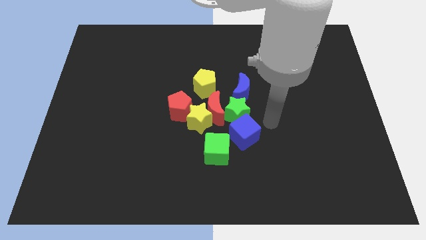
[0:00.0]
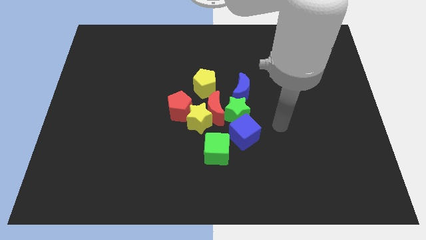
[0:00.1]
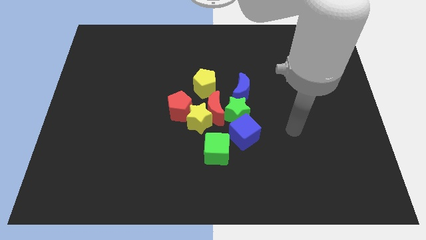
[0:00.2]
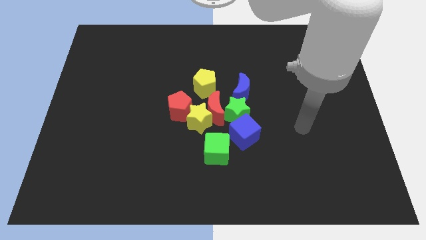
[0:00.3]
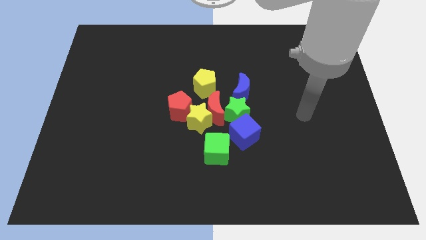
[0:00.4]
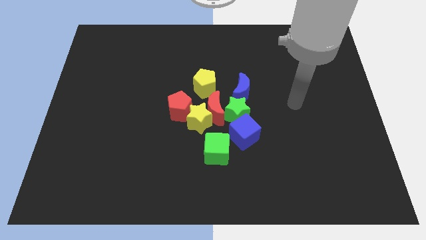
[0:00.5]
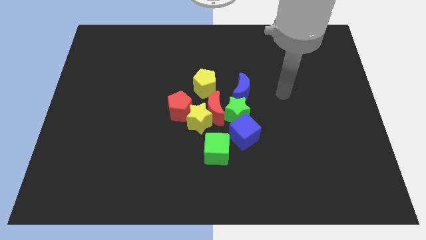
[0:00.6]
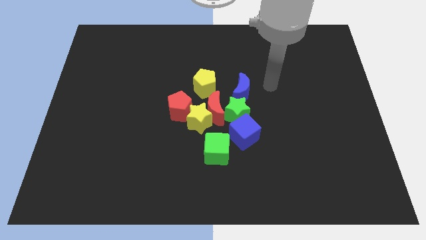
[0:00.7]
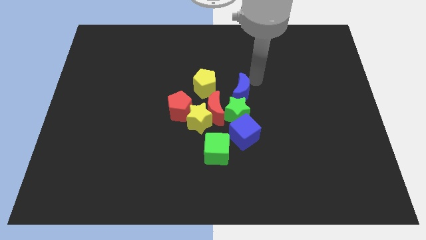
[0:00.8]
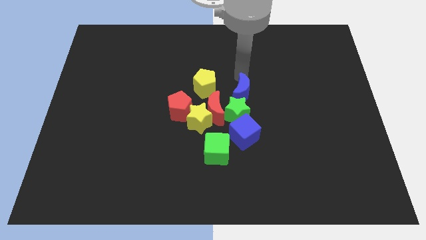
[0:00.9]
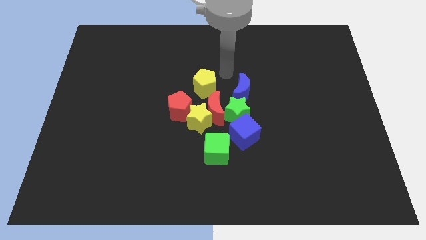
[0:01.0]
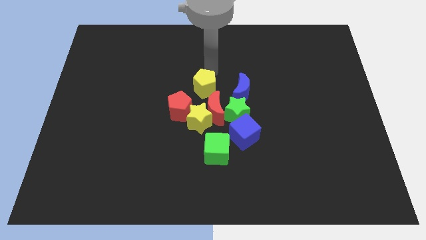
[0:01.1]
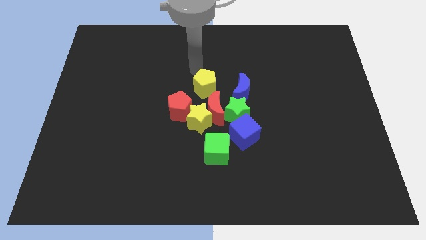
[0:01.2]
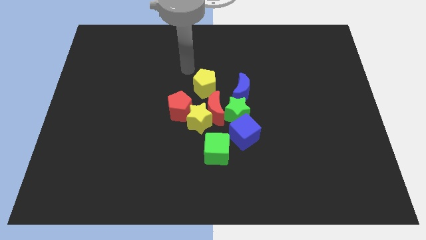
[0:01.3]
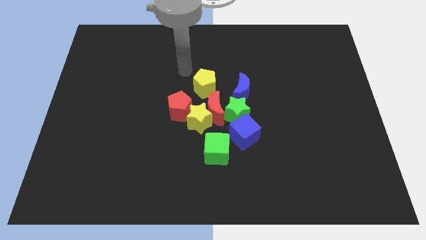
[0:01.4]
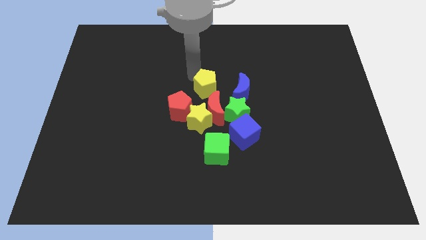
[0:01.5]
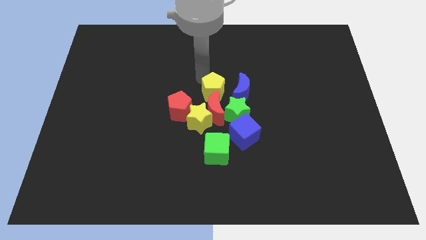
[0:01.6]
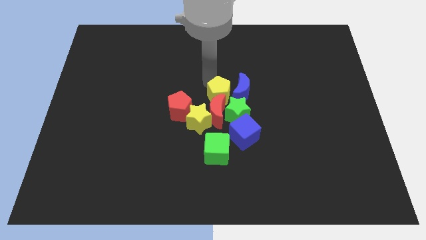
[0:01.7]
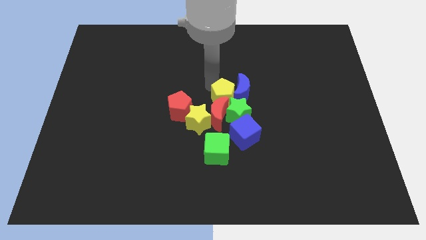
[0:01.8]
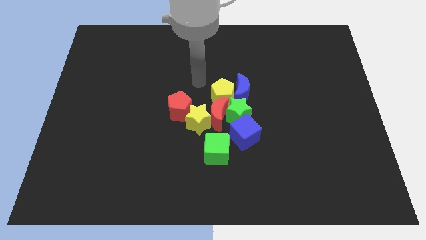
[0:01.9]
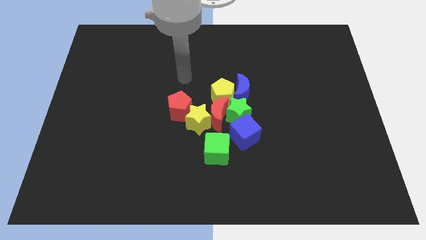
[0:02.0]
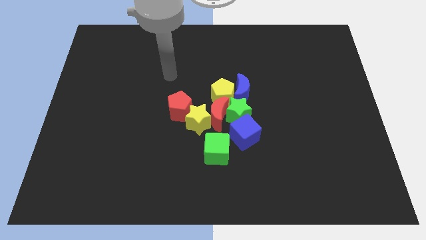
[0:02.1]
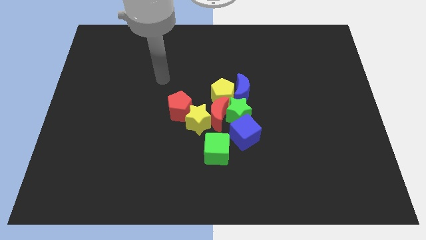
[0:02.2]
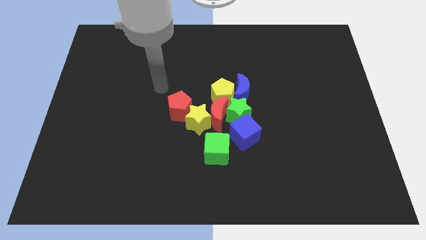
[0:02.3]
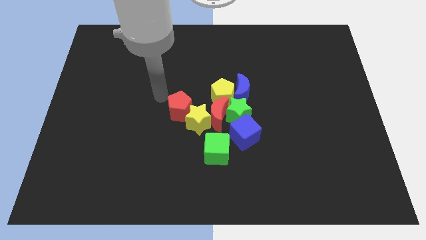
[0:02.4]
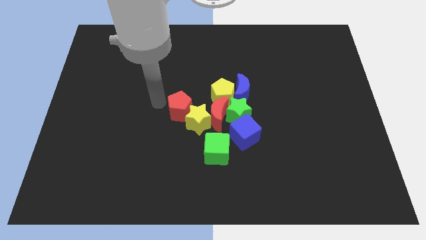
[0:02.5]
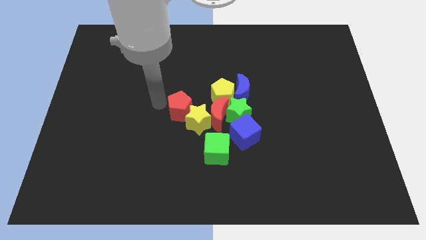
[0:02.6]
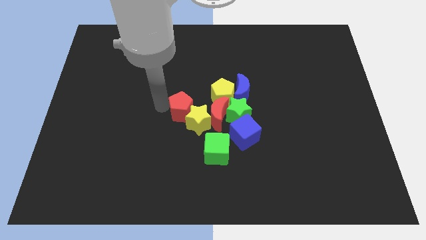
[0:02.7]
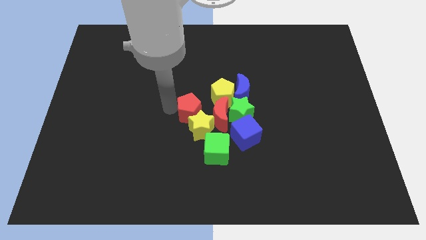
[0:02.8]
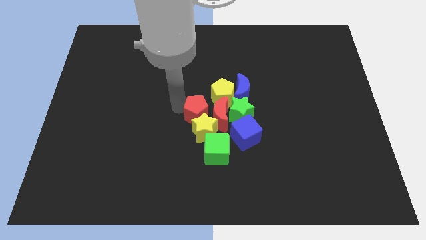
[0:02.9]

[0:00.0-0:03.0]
push the yellow pentagon into the red crescent

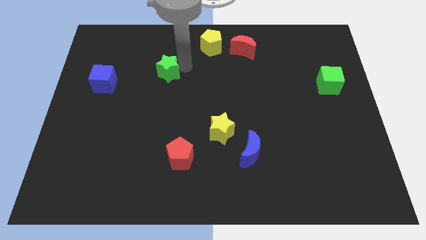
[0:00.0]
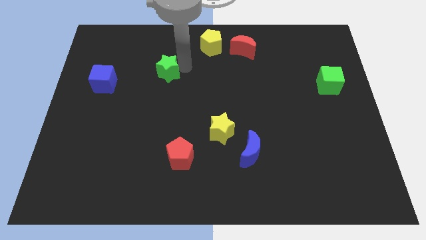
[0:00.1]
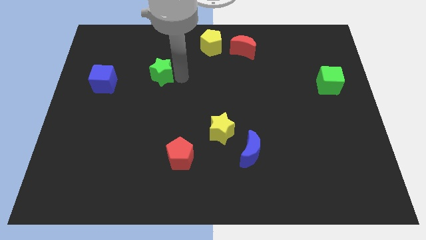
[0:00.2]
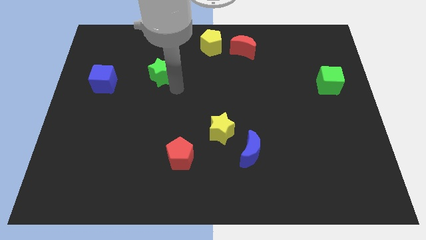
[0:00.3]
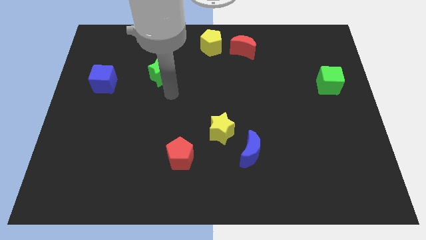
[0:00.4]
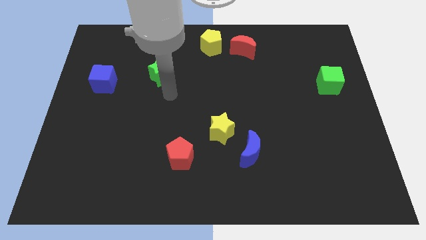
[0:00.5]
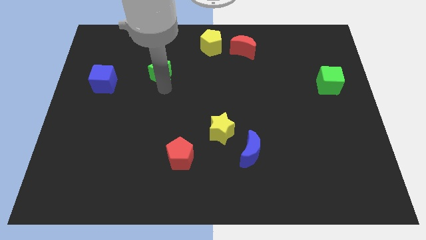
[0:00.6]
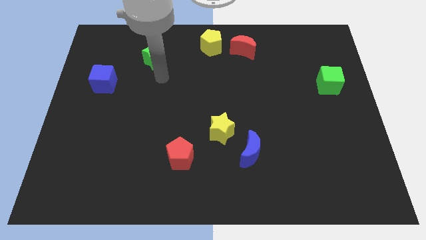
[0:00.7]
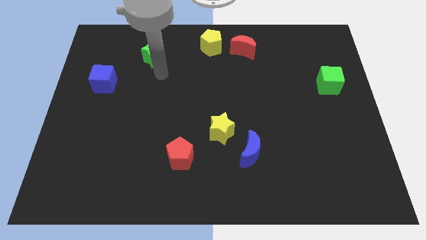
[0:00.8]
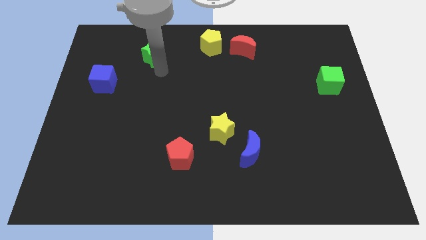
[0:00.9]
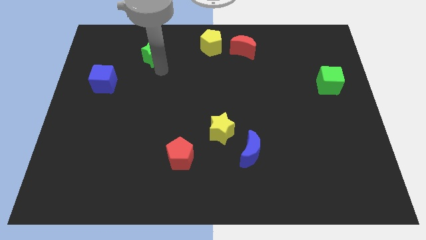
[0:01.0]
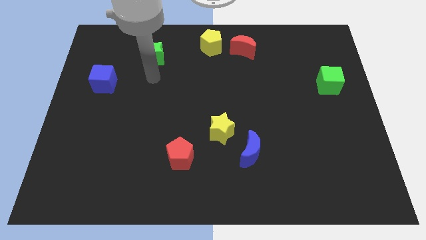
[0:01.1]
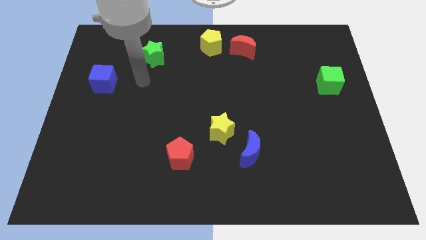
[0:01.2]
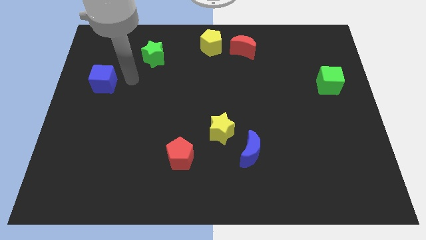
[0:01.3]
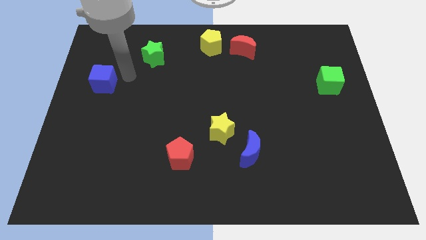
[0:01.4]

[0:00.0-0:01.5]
place green star to the left of yellow pentagon

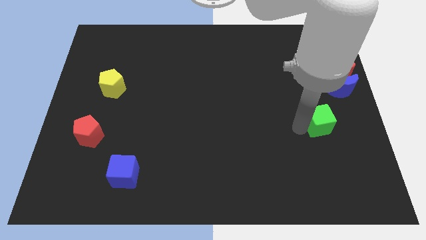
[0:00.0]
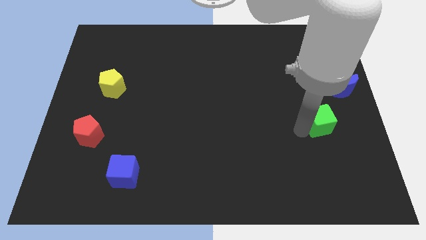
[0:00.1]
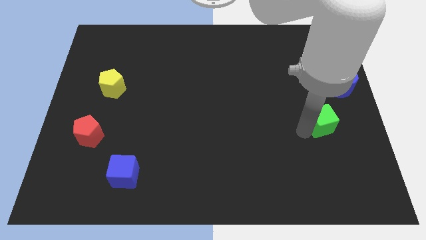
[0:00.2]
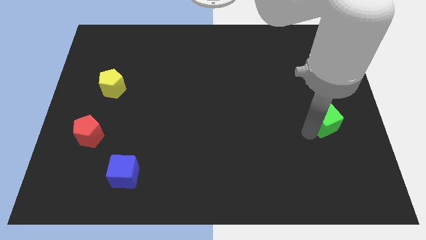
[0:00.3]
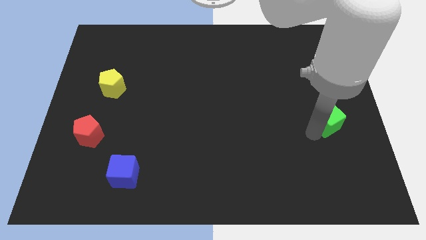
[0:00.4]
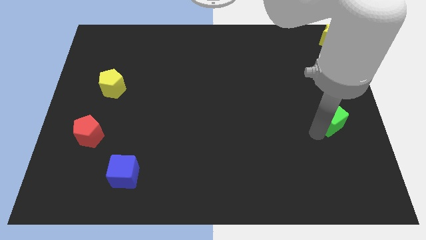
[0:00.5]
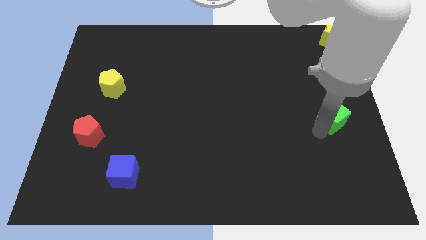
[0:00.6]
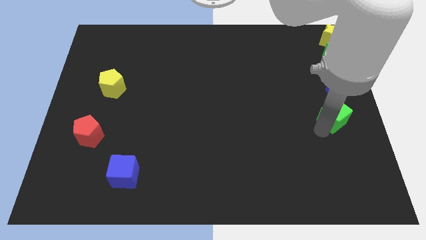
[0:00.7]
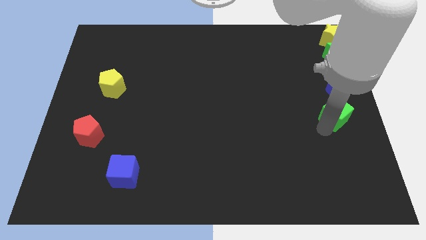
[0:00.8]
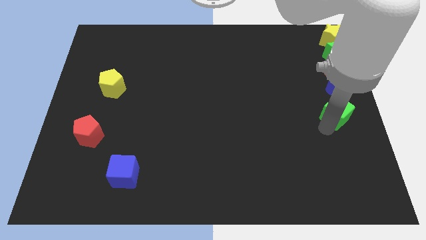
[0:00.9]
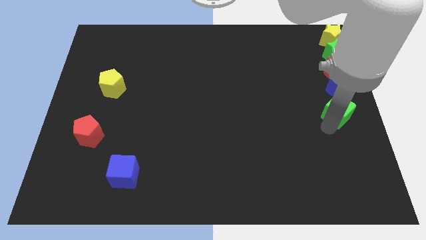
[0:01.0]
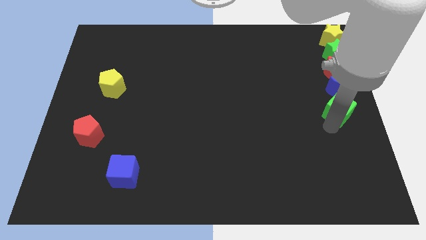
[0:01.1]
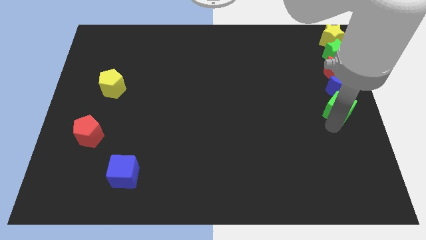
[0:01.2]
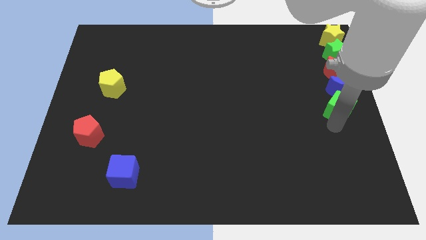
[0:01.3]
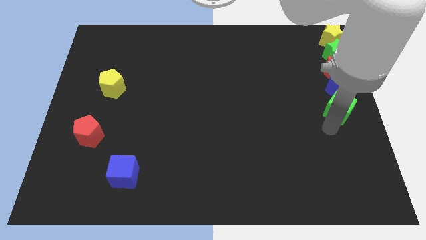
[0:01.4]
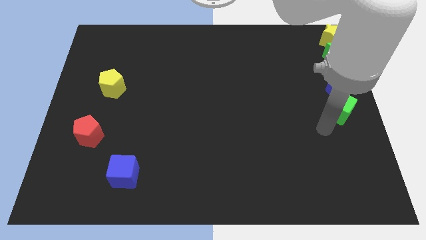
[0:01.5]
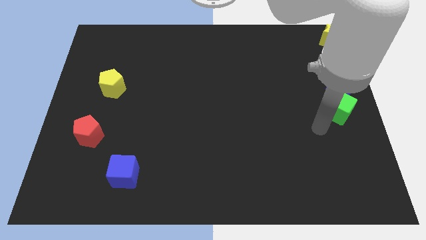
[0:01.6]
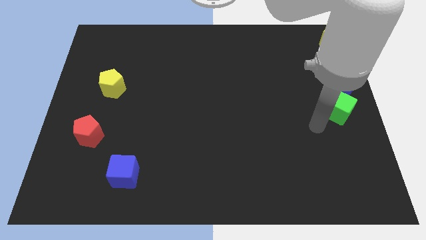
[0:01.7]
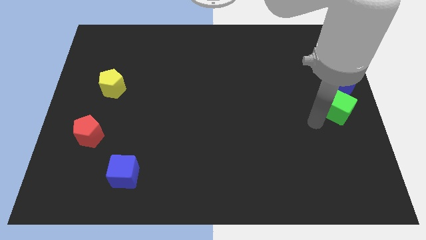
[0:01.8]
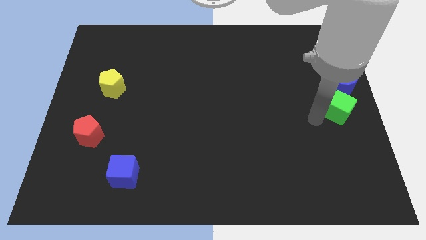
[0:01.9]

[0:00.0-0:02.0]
move green cube below the blue moon

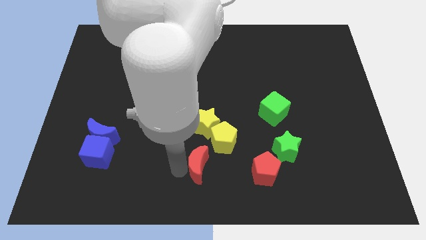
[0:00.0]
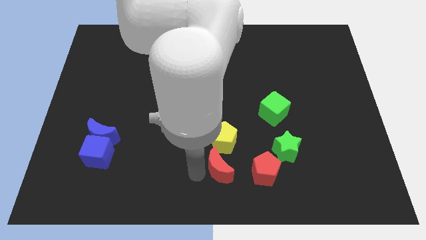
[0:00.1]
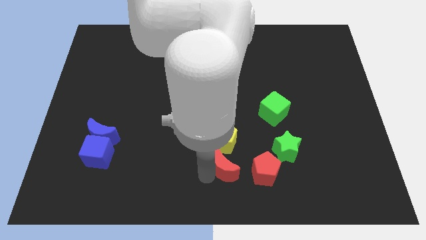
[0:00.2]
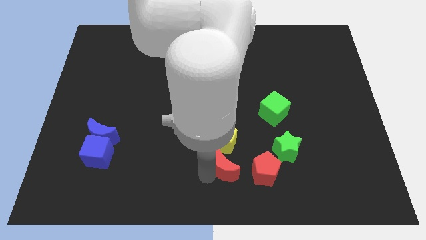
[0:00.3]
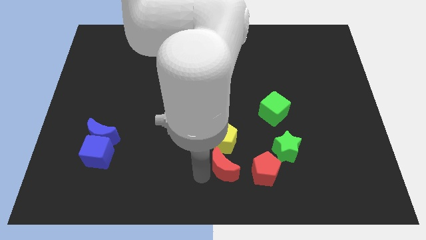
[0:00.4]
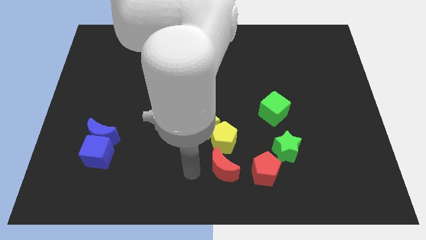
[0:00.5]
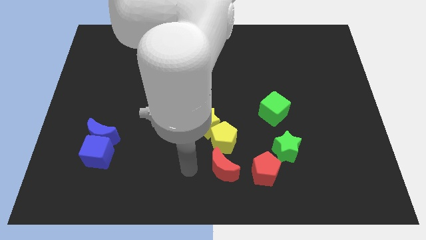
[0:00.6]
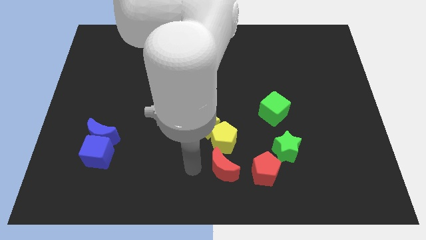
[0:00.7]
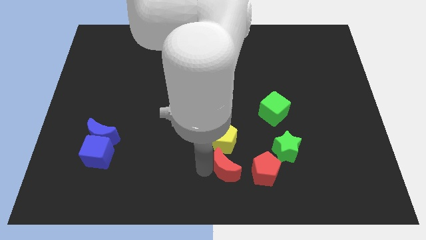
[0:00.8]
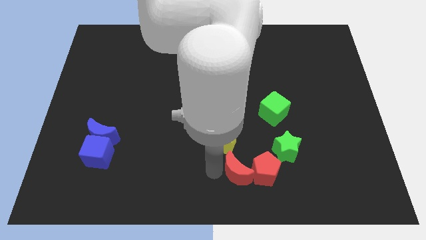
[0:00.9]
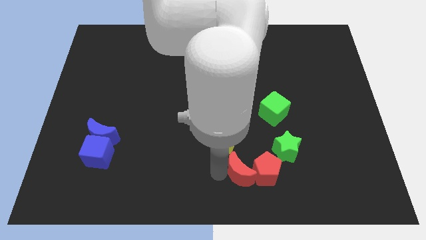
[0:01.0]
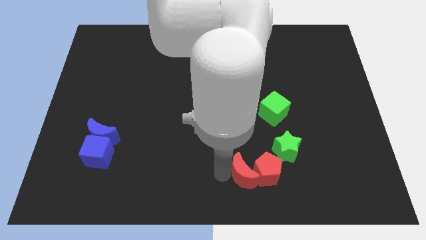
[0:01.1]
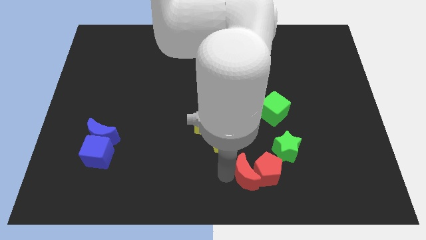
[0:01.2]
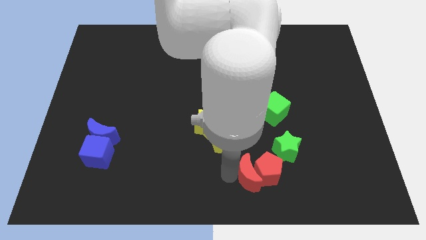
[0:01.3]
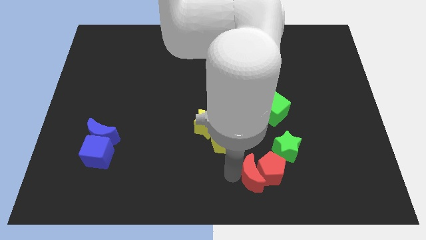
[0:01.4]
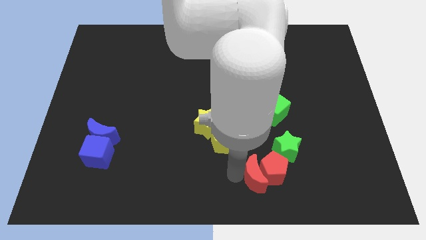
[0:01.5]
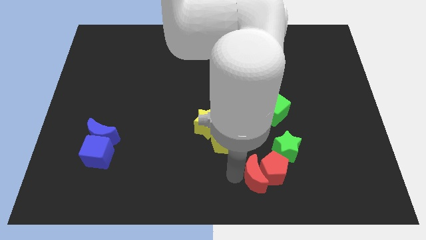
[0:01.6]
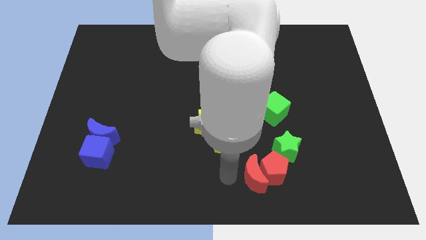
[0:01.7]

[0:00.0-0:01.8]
place the red crescent close to the red pentagon

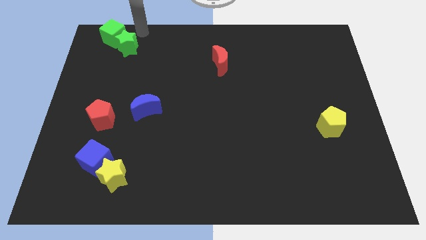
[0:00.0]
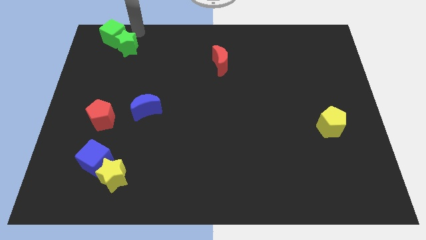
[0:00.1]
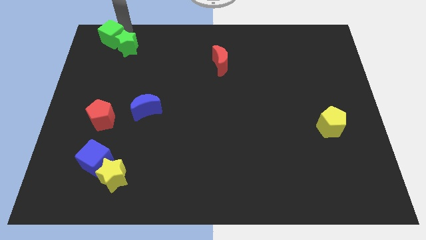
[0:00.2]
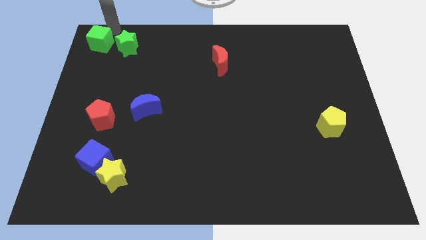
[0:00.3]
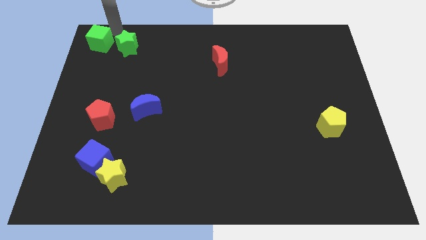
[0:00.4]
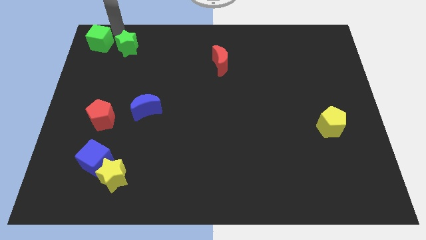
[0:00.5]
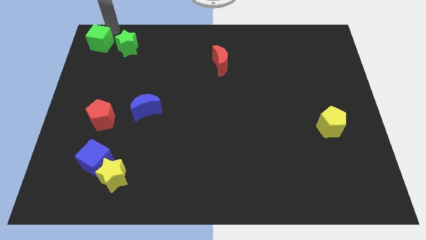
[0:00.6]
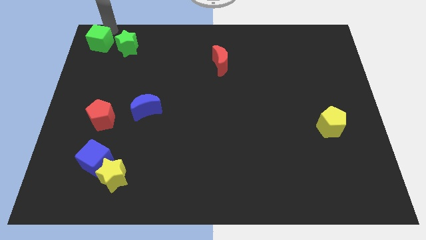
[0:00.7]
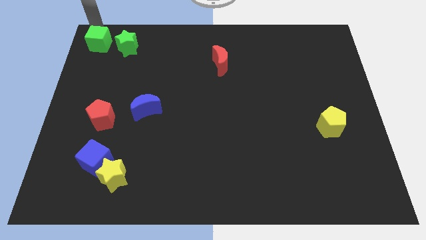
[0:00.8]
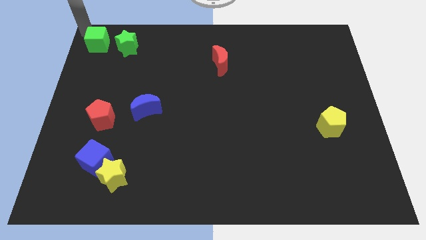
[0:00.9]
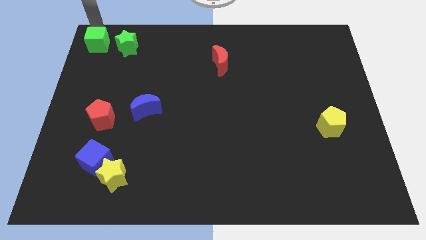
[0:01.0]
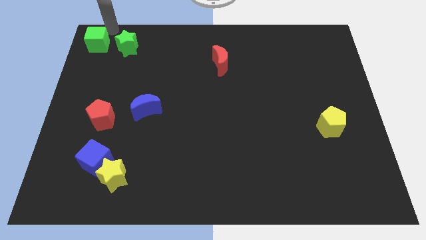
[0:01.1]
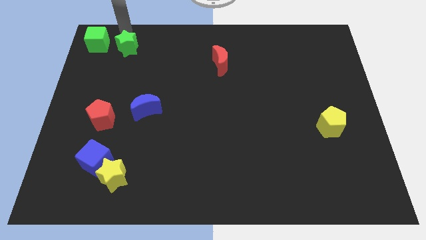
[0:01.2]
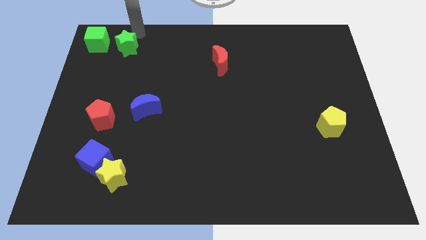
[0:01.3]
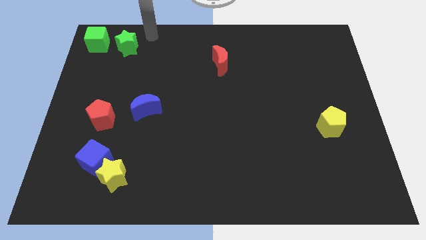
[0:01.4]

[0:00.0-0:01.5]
separate green cube from the green star
